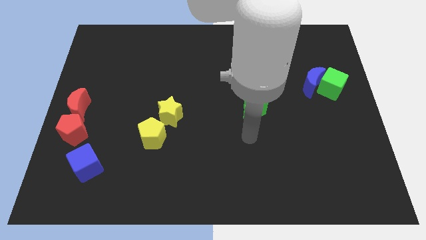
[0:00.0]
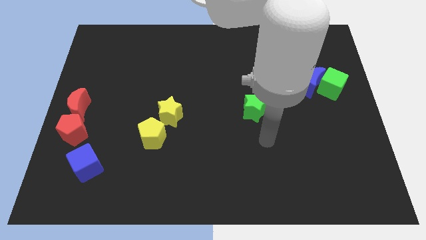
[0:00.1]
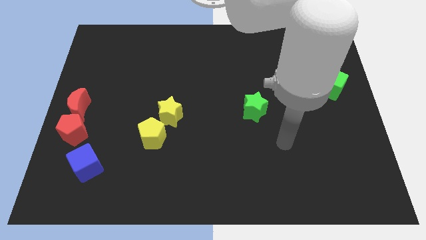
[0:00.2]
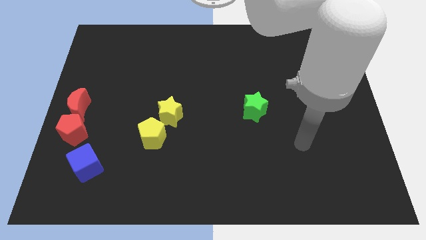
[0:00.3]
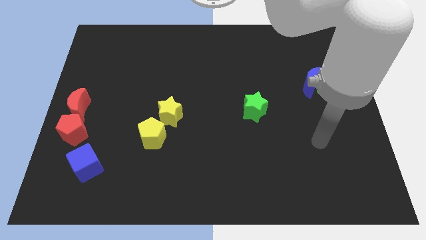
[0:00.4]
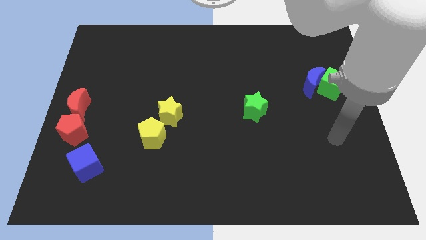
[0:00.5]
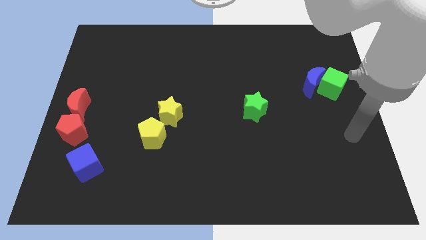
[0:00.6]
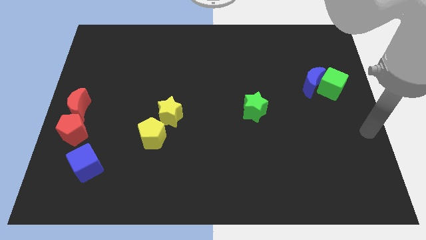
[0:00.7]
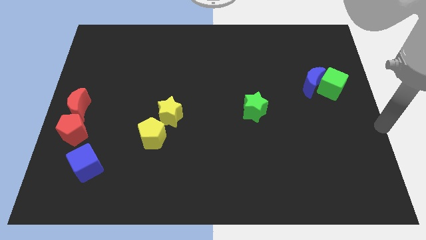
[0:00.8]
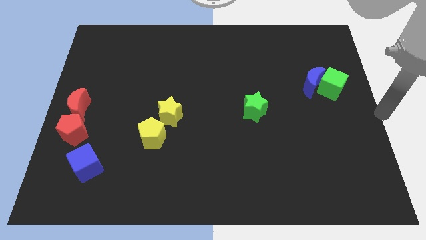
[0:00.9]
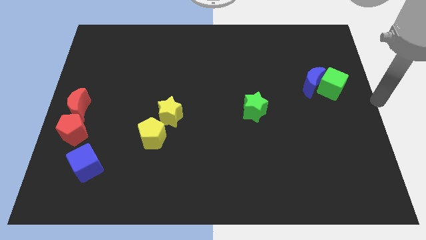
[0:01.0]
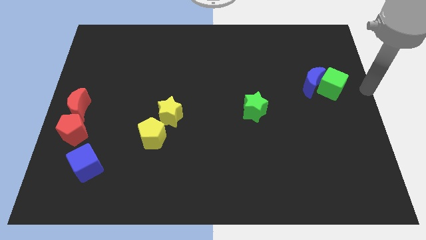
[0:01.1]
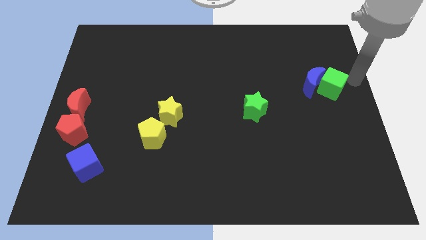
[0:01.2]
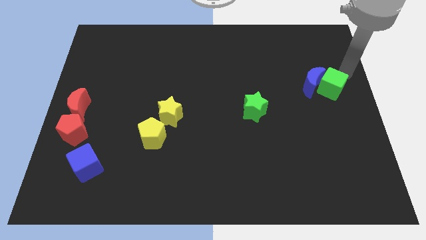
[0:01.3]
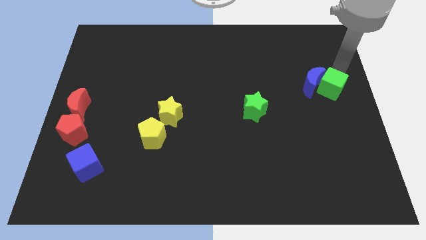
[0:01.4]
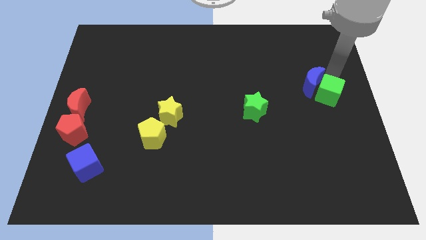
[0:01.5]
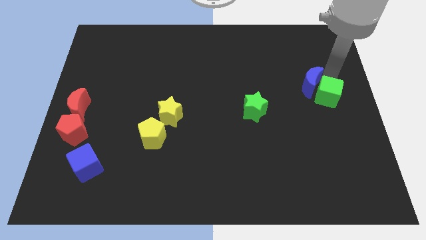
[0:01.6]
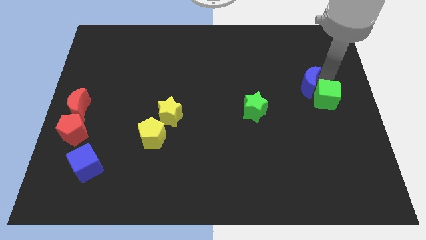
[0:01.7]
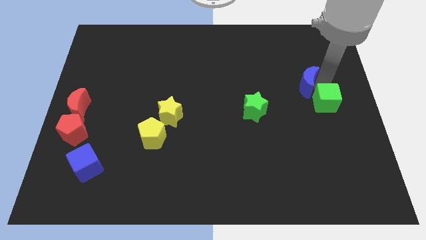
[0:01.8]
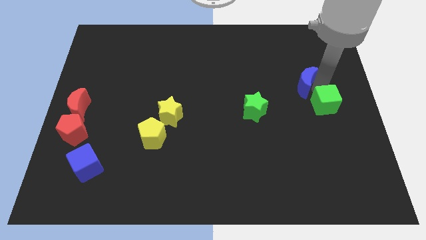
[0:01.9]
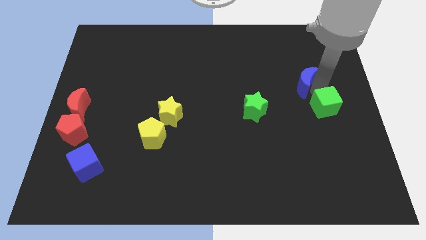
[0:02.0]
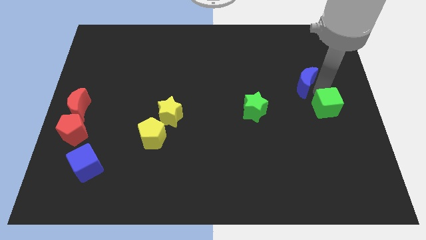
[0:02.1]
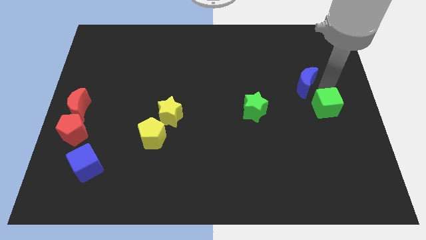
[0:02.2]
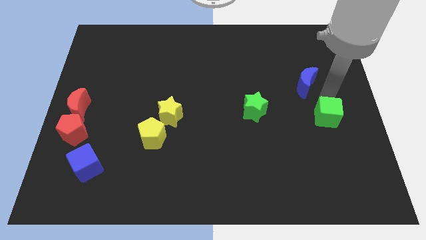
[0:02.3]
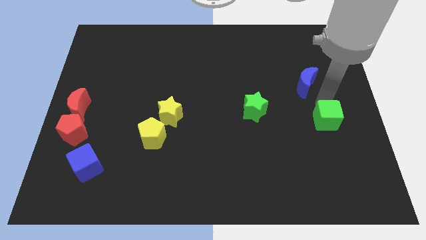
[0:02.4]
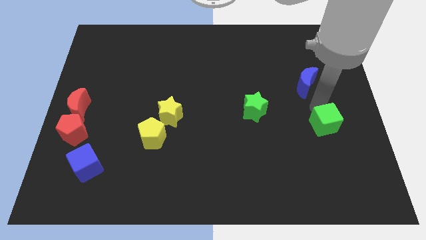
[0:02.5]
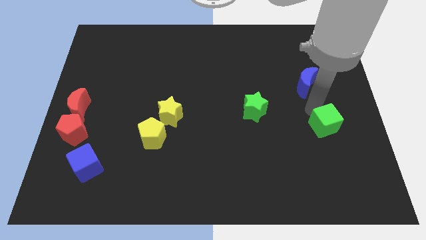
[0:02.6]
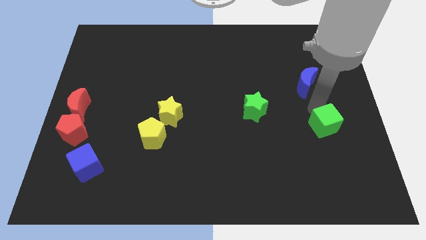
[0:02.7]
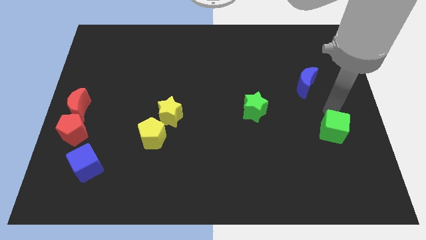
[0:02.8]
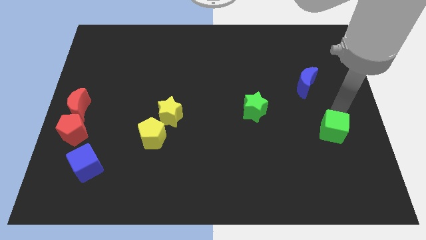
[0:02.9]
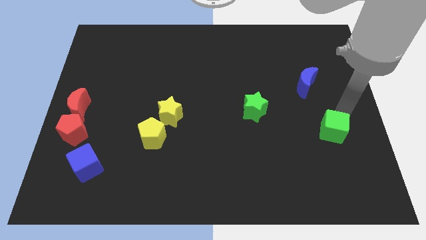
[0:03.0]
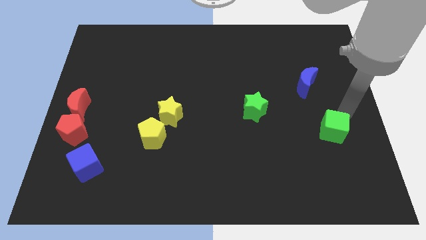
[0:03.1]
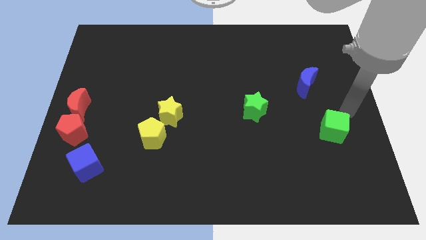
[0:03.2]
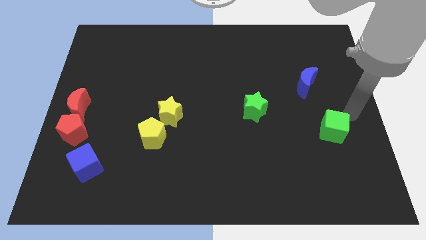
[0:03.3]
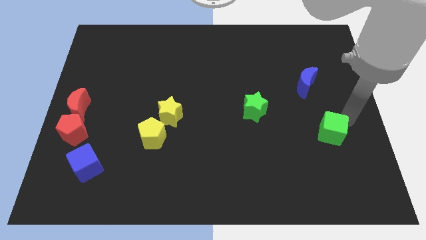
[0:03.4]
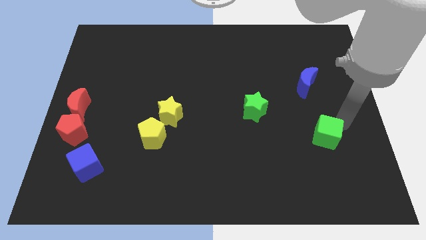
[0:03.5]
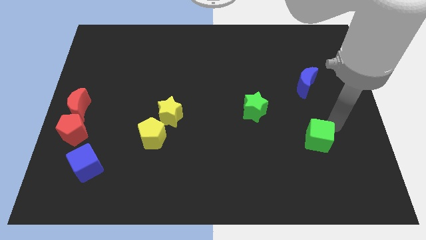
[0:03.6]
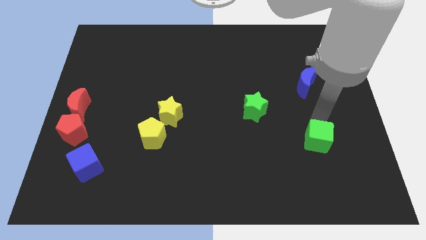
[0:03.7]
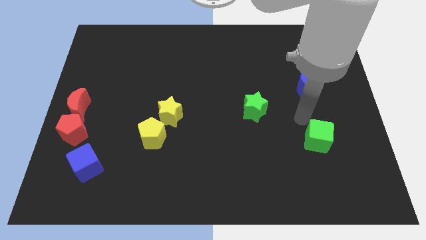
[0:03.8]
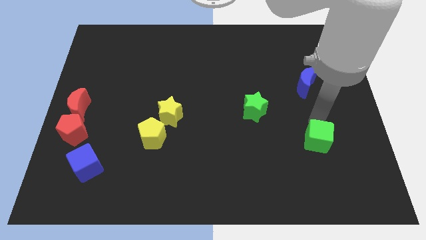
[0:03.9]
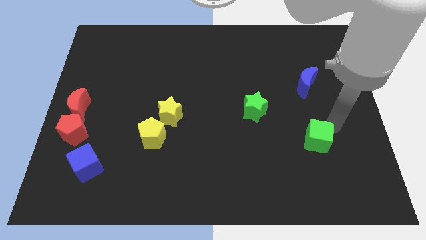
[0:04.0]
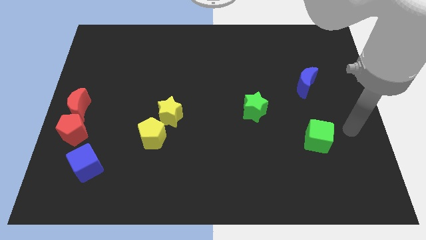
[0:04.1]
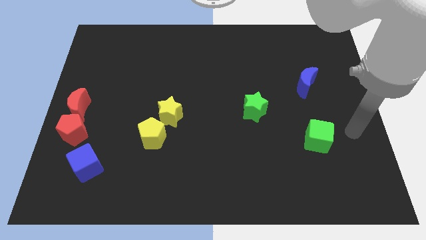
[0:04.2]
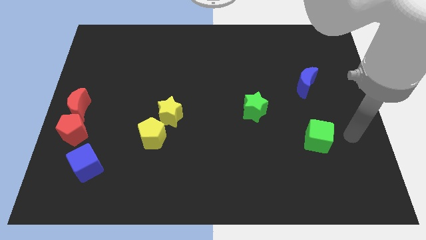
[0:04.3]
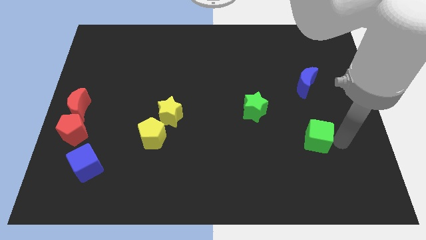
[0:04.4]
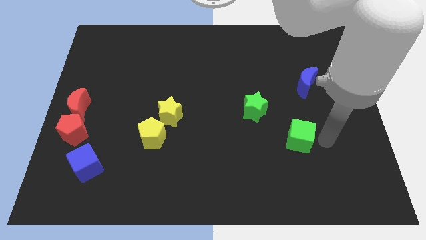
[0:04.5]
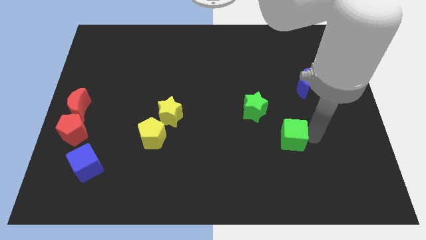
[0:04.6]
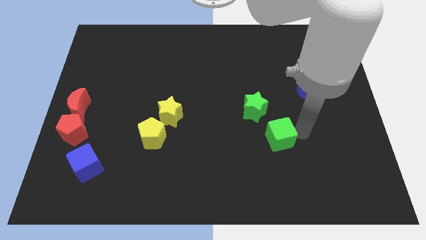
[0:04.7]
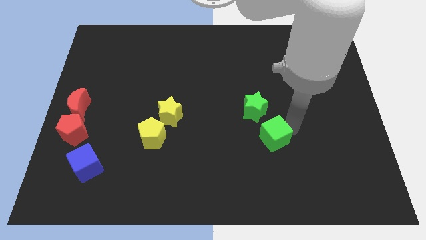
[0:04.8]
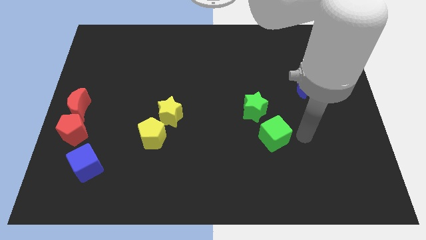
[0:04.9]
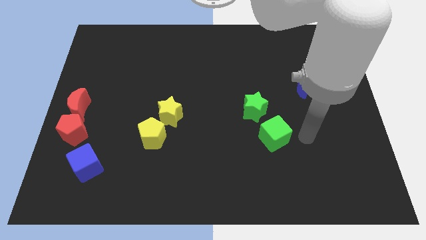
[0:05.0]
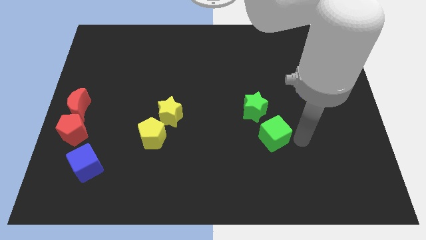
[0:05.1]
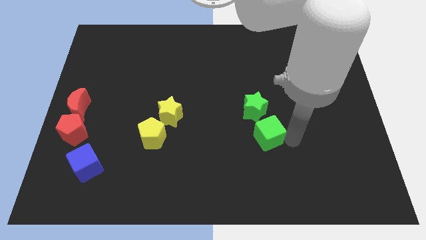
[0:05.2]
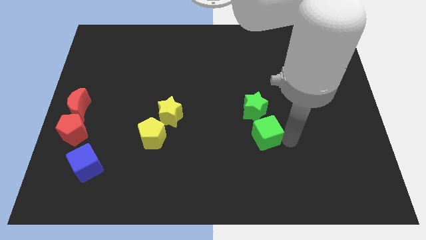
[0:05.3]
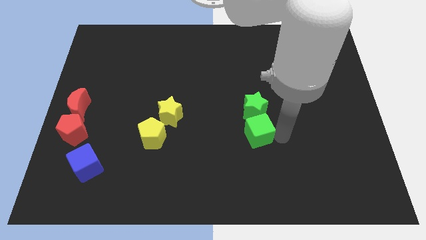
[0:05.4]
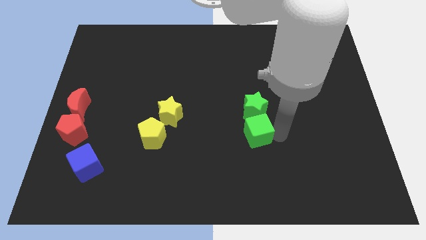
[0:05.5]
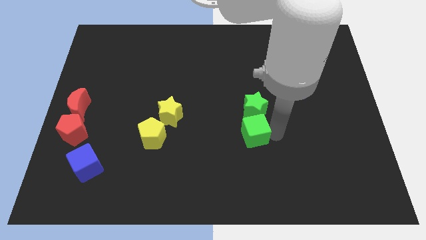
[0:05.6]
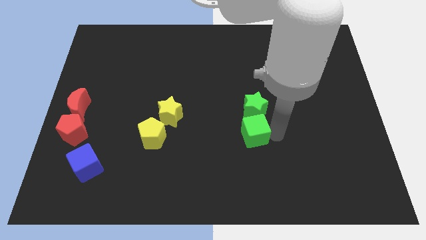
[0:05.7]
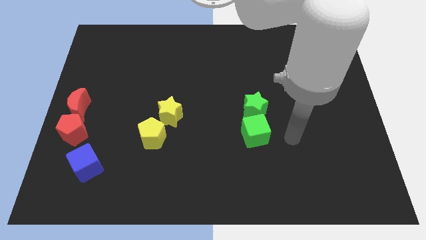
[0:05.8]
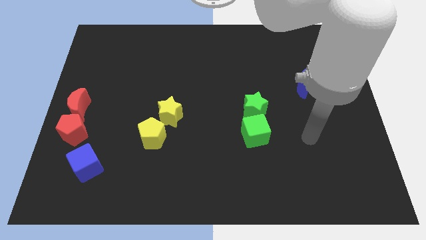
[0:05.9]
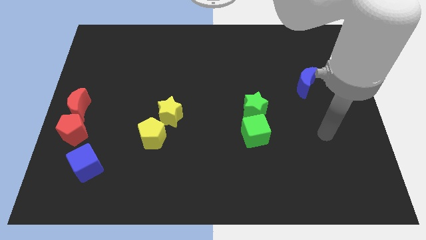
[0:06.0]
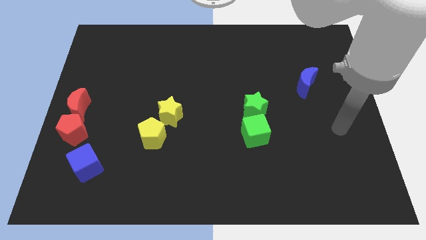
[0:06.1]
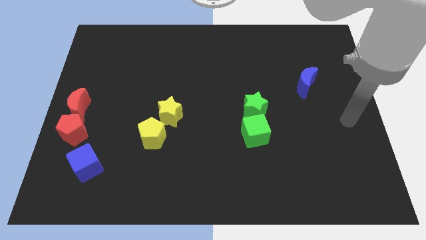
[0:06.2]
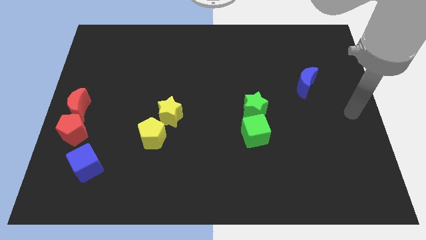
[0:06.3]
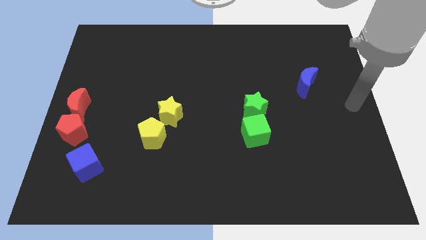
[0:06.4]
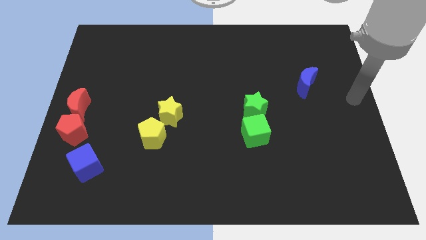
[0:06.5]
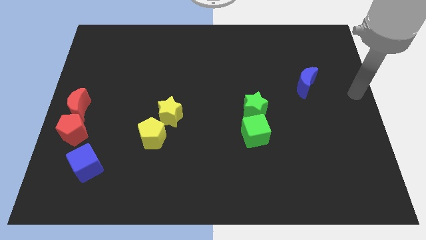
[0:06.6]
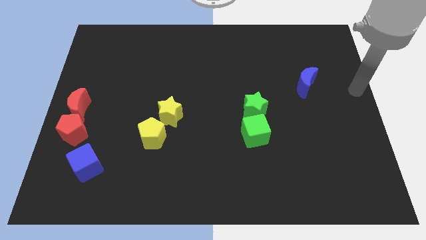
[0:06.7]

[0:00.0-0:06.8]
place the green cube vertically below the green star

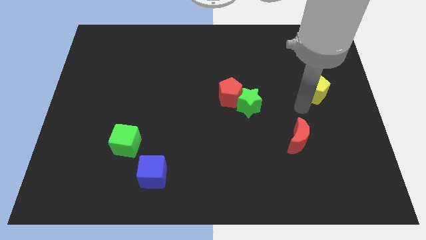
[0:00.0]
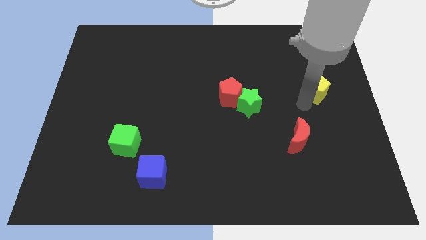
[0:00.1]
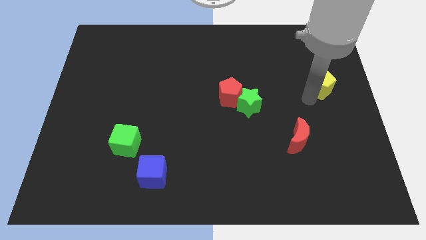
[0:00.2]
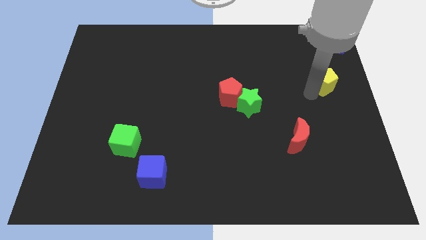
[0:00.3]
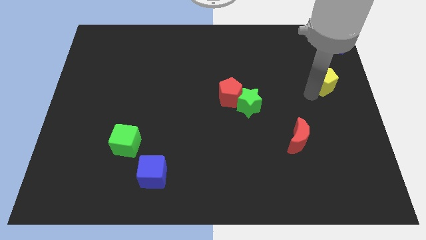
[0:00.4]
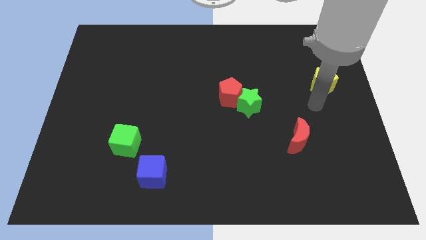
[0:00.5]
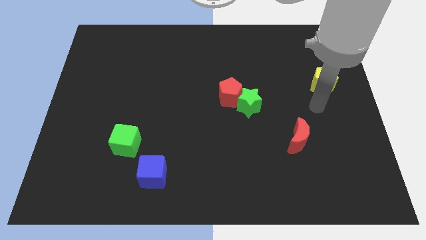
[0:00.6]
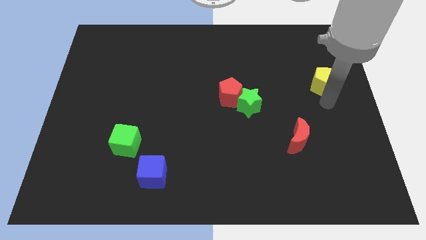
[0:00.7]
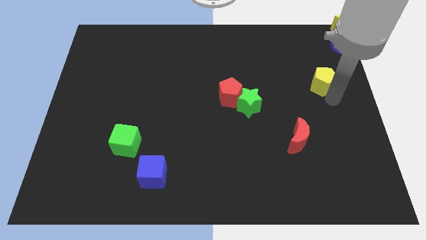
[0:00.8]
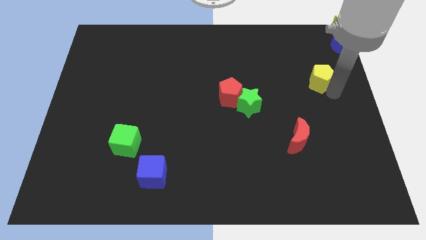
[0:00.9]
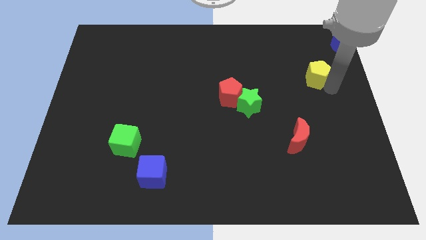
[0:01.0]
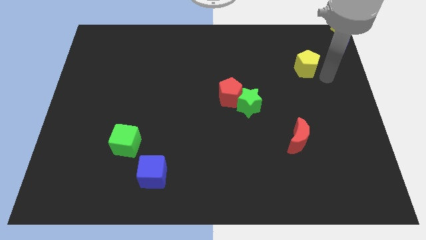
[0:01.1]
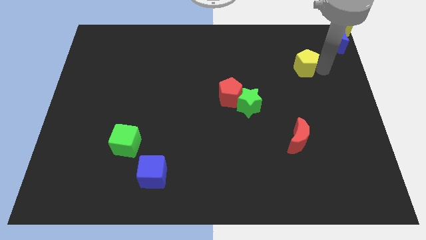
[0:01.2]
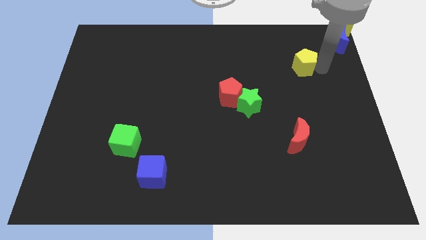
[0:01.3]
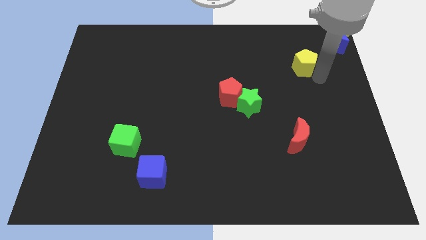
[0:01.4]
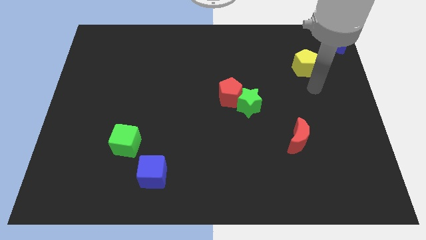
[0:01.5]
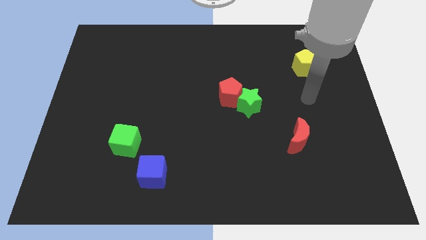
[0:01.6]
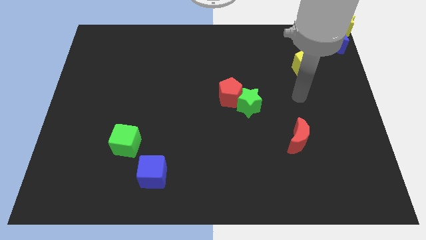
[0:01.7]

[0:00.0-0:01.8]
push the yellow pentagon to the bottom left of the blue crescent

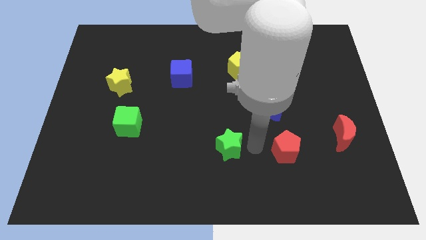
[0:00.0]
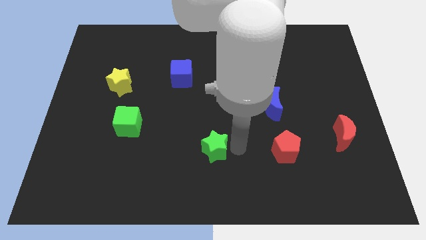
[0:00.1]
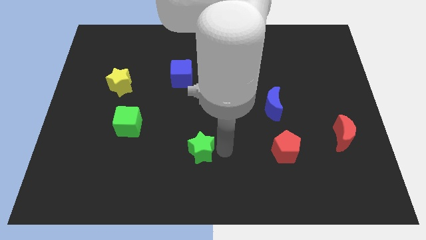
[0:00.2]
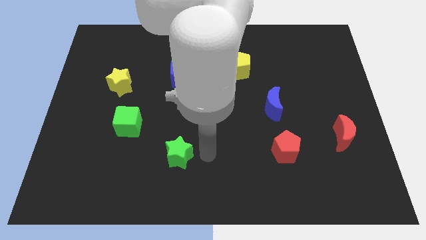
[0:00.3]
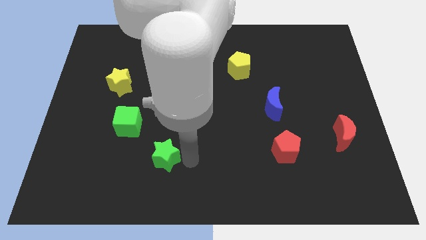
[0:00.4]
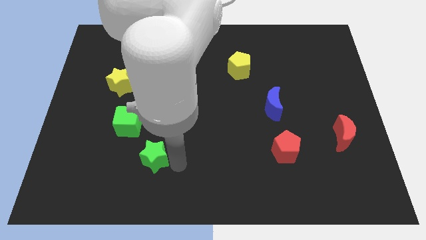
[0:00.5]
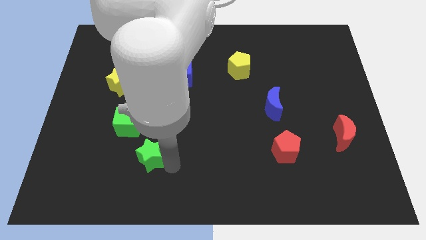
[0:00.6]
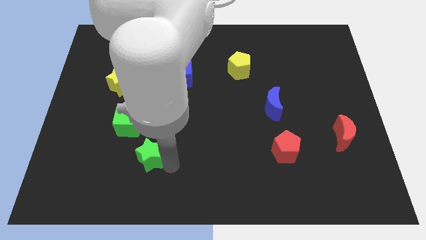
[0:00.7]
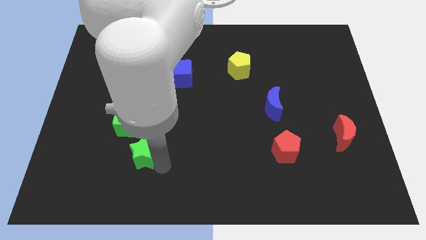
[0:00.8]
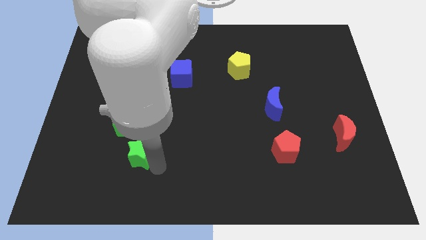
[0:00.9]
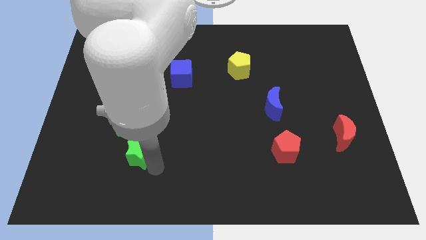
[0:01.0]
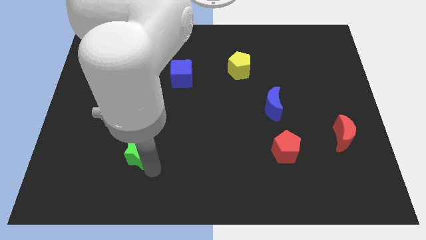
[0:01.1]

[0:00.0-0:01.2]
push the green star below the green cube
